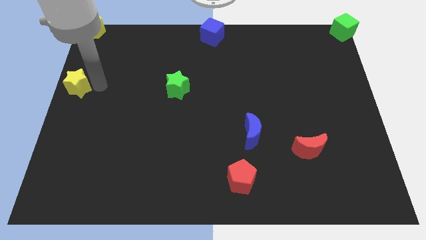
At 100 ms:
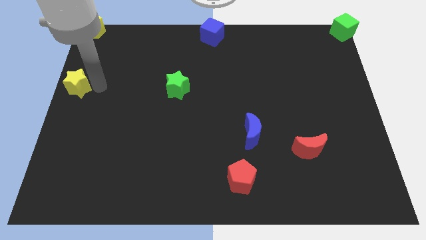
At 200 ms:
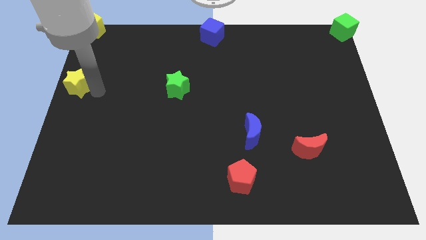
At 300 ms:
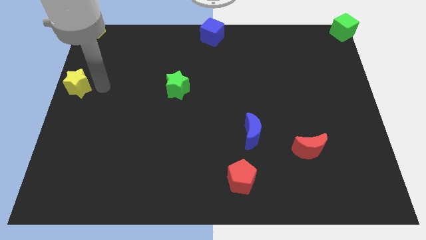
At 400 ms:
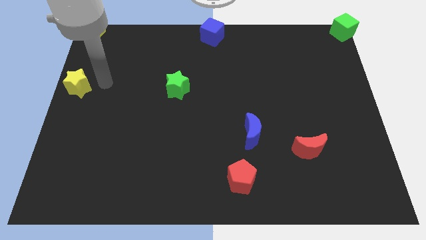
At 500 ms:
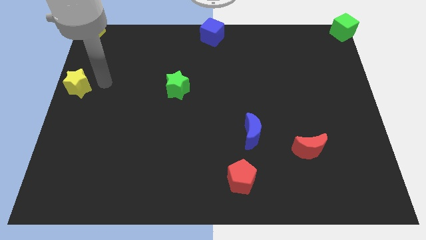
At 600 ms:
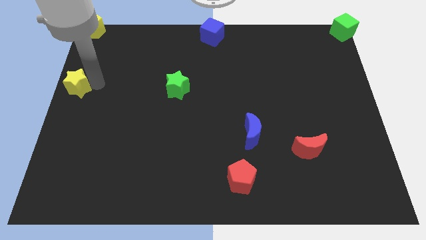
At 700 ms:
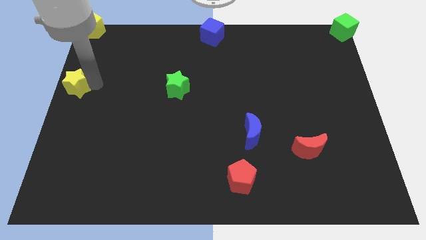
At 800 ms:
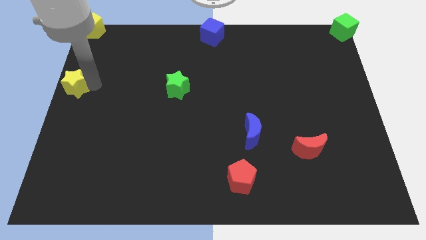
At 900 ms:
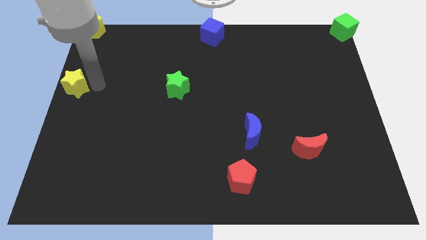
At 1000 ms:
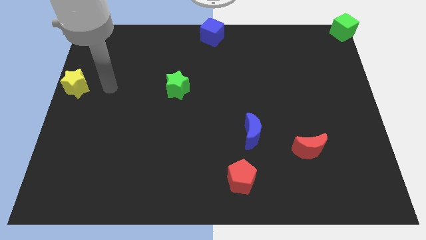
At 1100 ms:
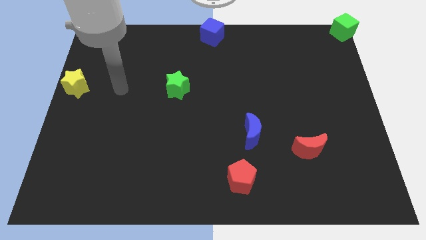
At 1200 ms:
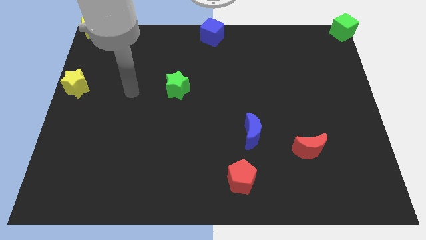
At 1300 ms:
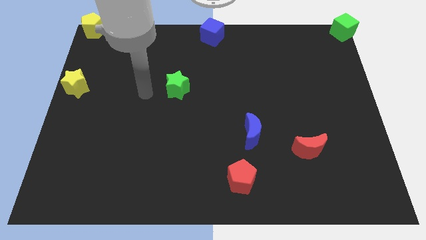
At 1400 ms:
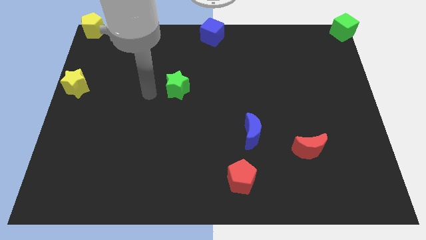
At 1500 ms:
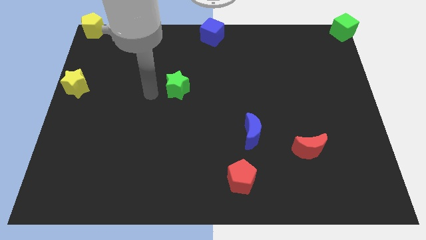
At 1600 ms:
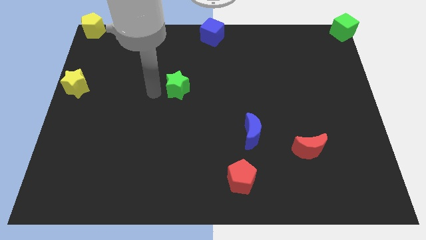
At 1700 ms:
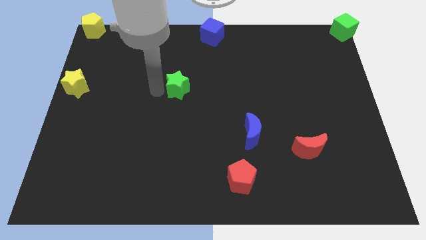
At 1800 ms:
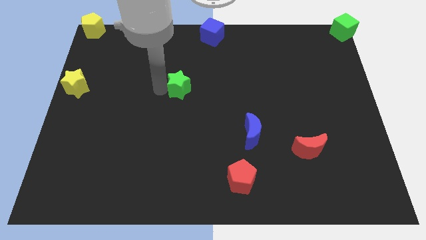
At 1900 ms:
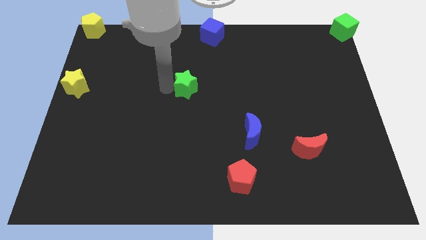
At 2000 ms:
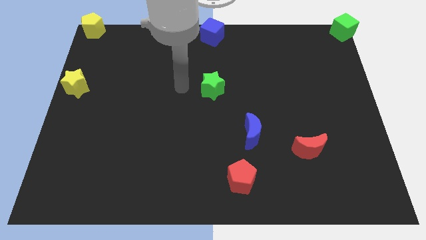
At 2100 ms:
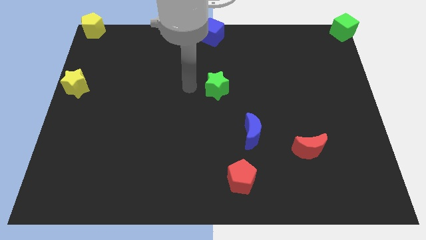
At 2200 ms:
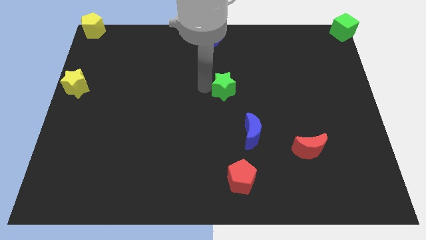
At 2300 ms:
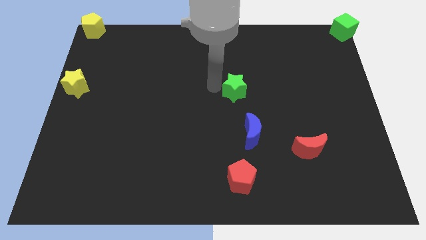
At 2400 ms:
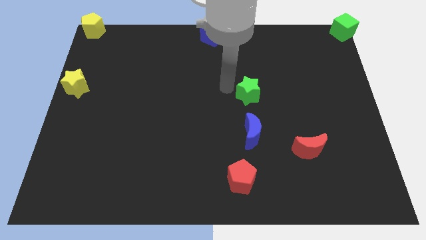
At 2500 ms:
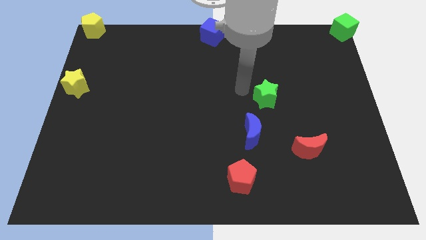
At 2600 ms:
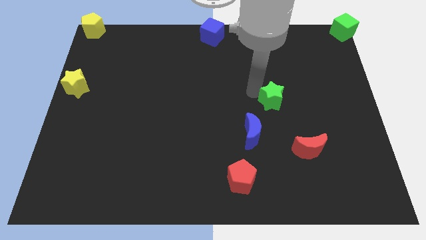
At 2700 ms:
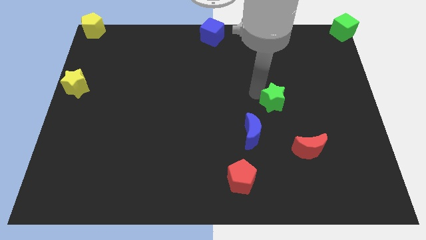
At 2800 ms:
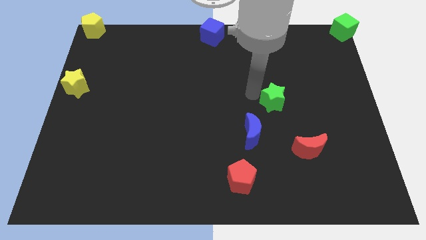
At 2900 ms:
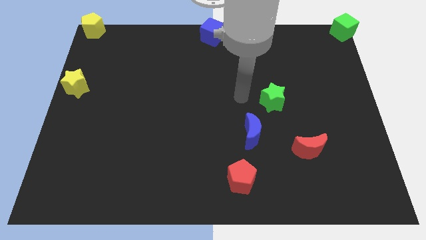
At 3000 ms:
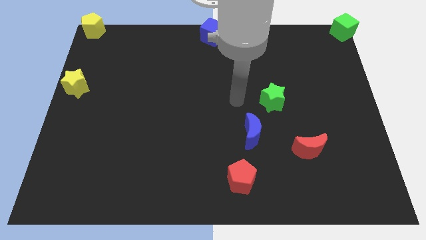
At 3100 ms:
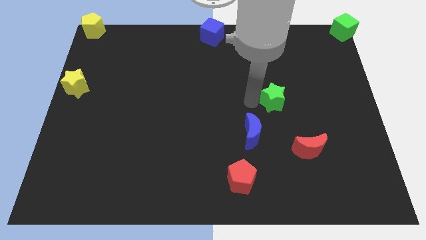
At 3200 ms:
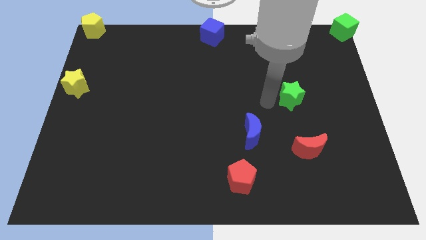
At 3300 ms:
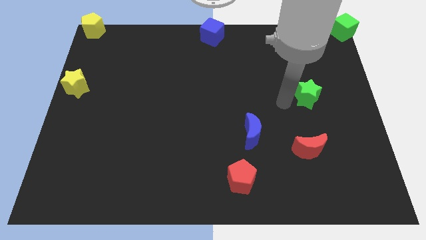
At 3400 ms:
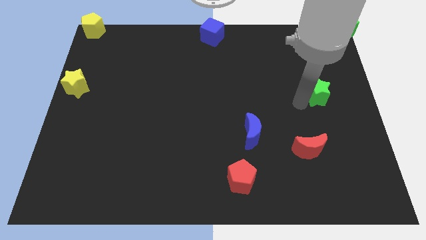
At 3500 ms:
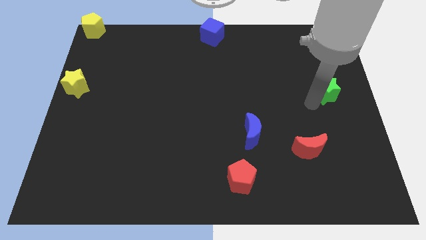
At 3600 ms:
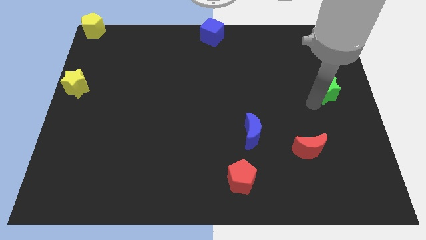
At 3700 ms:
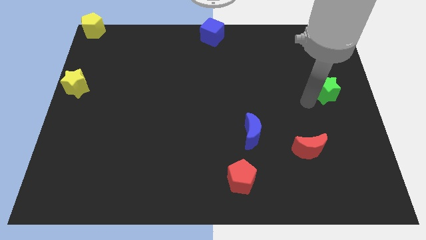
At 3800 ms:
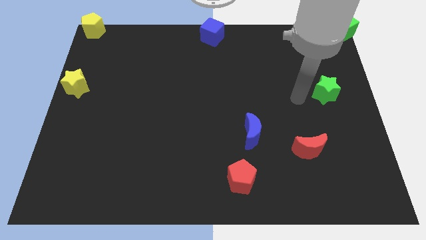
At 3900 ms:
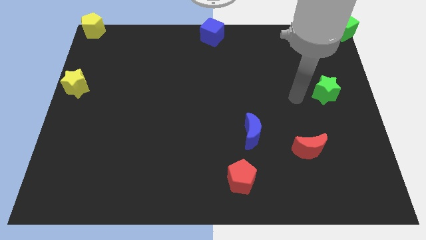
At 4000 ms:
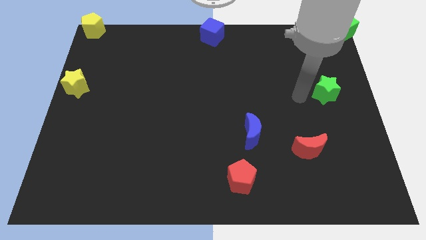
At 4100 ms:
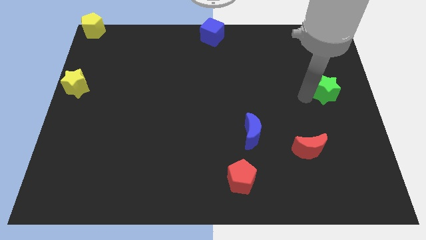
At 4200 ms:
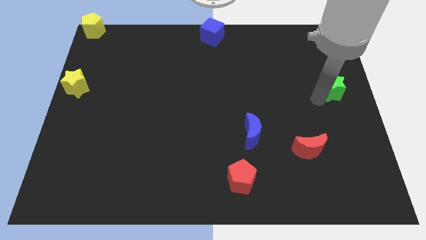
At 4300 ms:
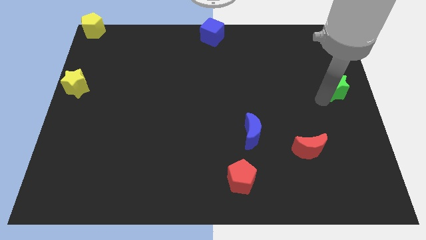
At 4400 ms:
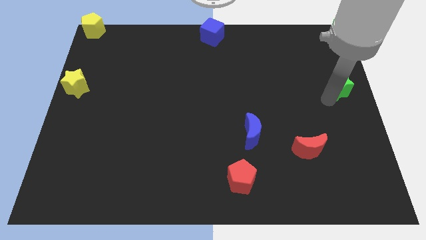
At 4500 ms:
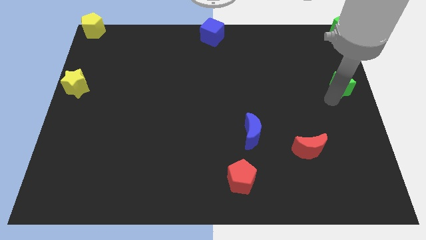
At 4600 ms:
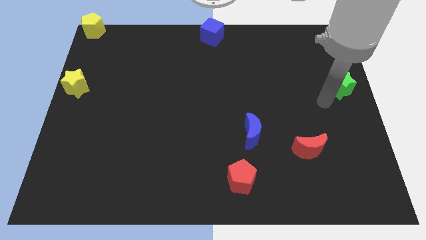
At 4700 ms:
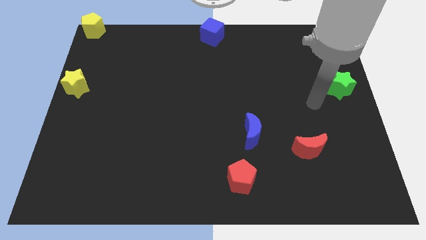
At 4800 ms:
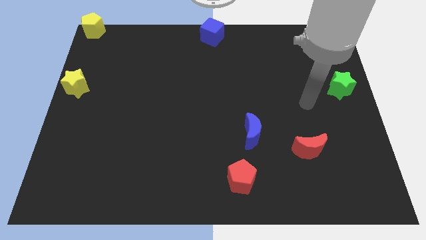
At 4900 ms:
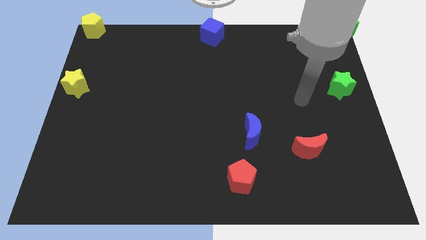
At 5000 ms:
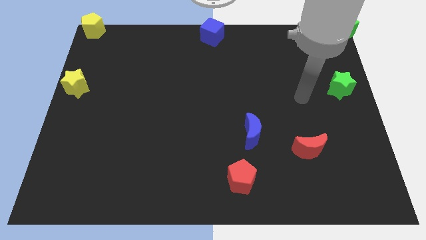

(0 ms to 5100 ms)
move the green star to the center right side of the board

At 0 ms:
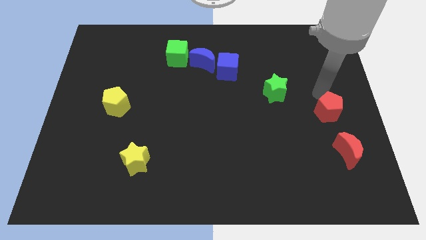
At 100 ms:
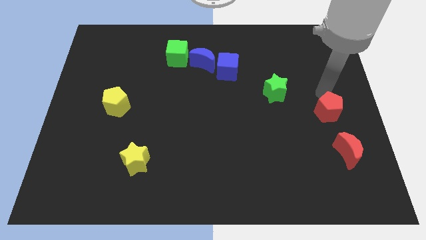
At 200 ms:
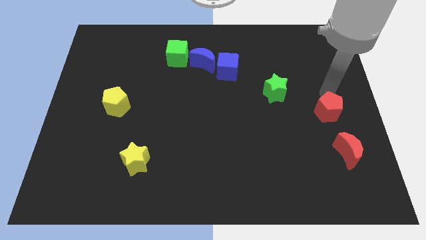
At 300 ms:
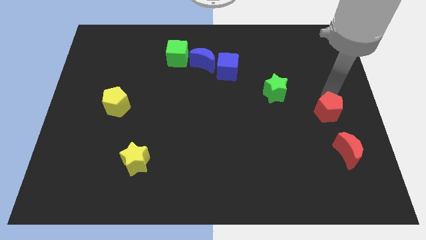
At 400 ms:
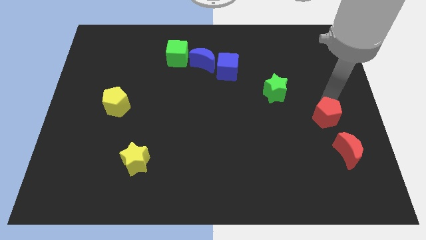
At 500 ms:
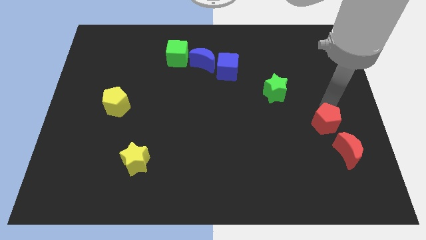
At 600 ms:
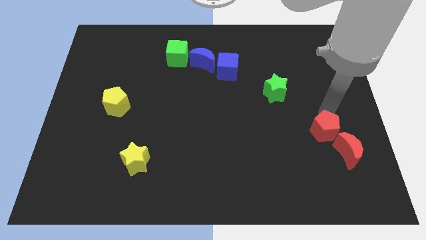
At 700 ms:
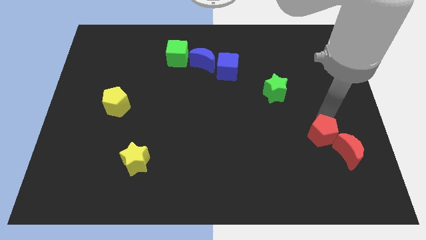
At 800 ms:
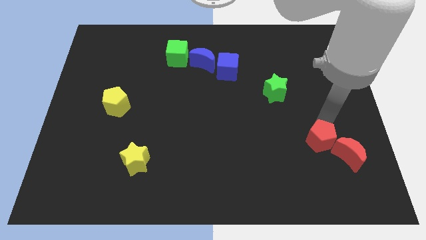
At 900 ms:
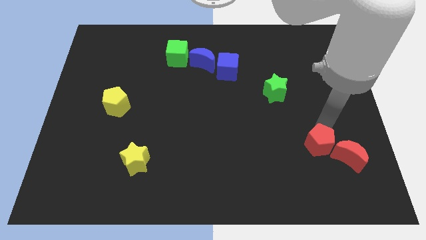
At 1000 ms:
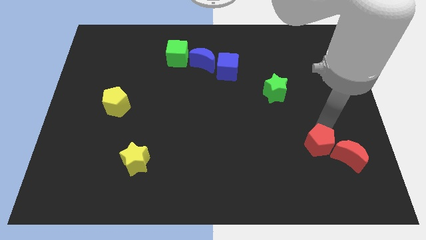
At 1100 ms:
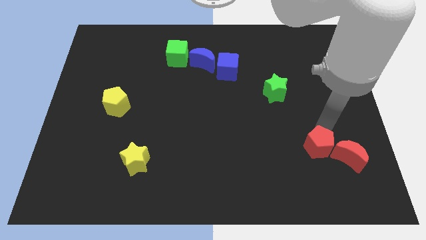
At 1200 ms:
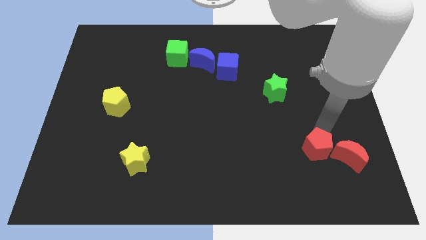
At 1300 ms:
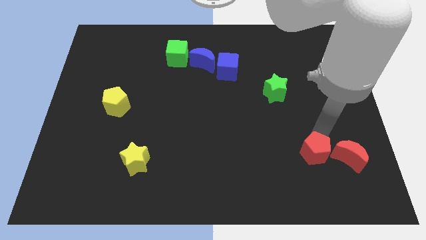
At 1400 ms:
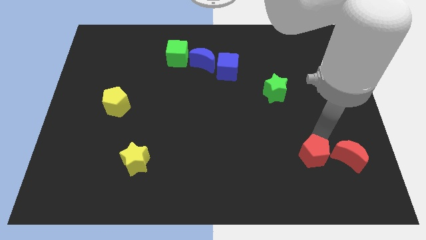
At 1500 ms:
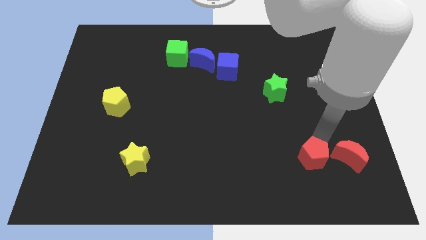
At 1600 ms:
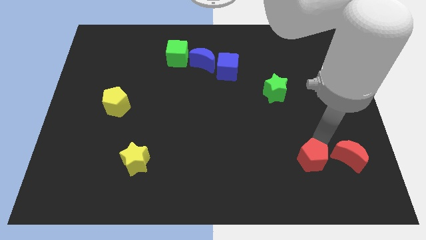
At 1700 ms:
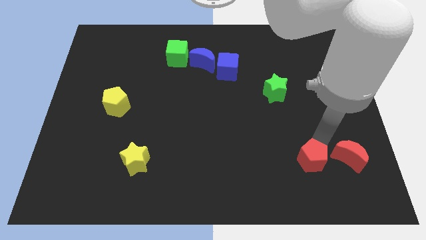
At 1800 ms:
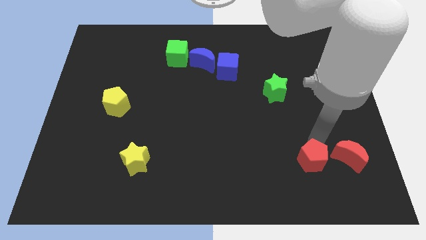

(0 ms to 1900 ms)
move red pentagon to the left of red crescent

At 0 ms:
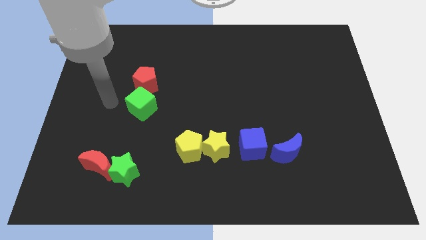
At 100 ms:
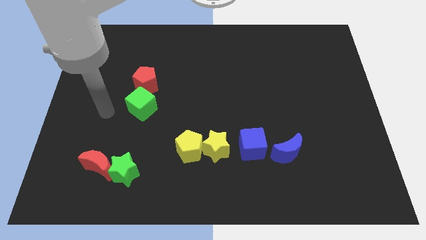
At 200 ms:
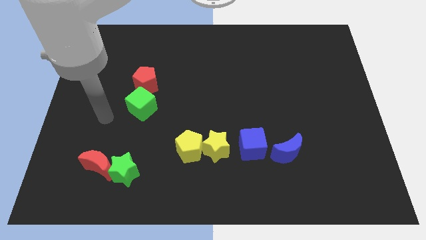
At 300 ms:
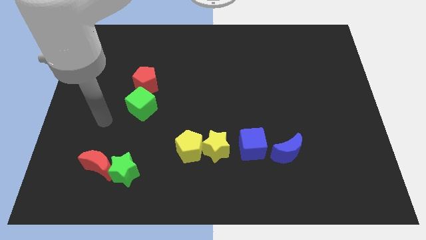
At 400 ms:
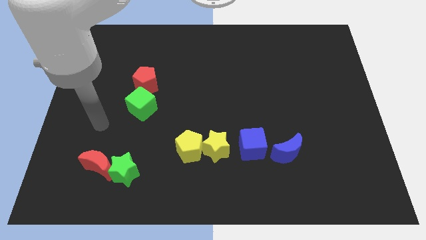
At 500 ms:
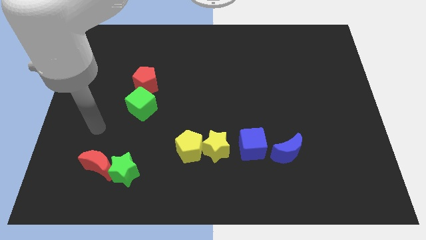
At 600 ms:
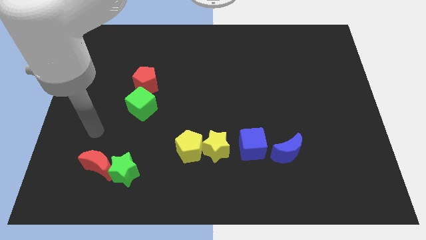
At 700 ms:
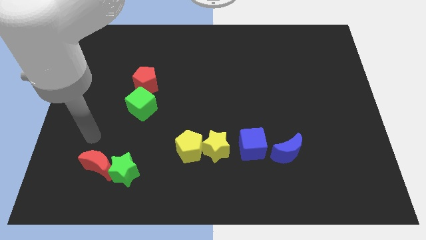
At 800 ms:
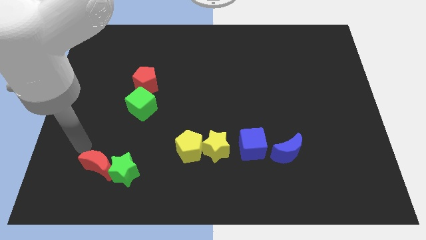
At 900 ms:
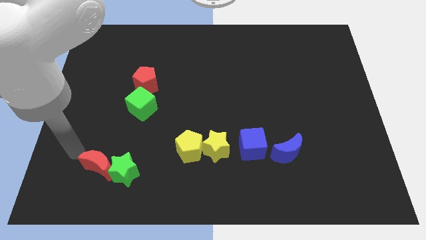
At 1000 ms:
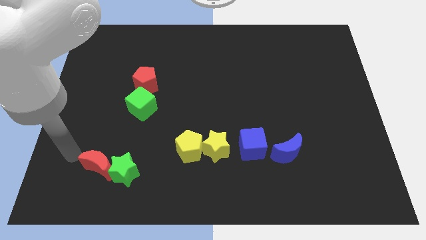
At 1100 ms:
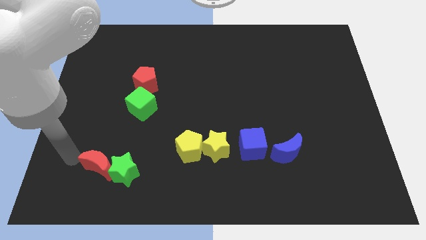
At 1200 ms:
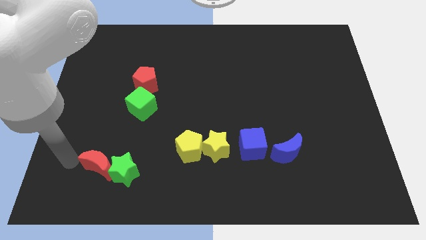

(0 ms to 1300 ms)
point your hand at the left of the red crescent

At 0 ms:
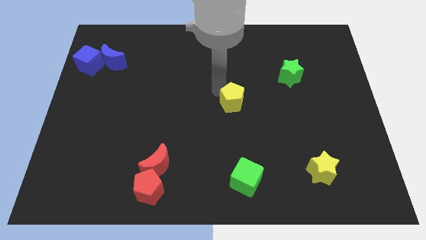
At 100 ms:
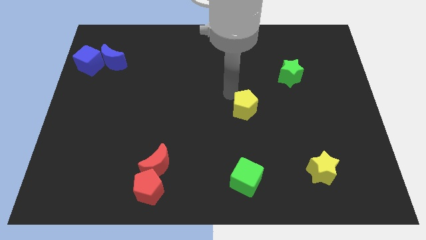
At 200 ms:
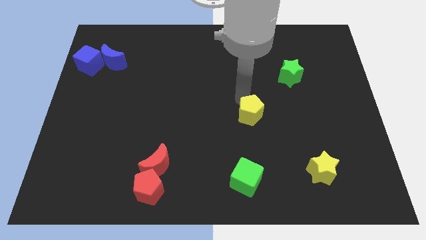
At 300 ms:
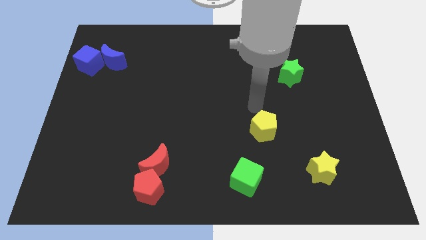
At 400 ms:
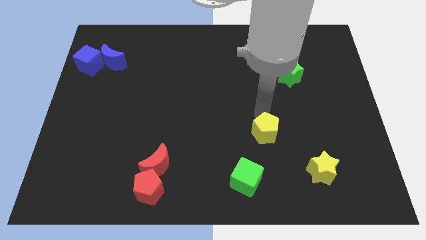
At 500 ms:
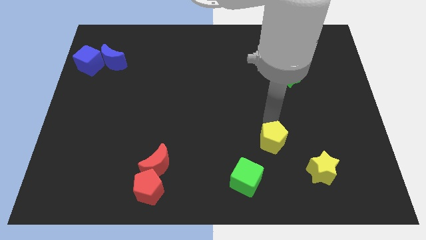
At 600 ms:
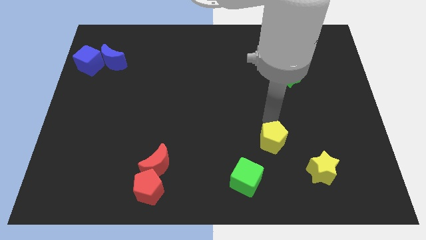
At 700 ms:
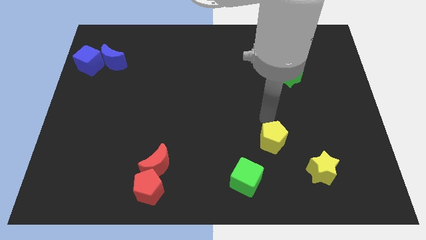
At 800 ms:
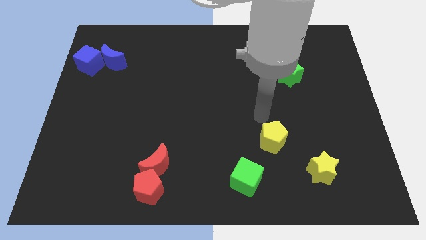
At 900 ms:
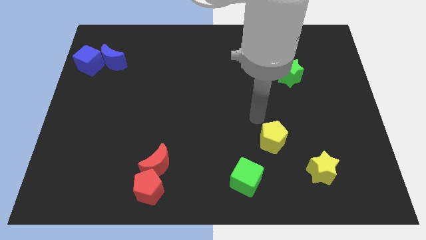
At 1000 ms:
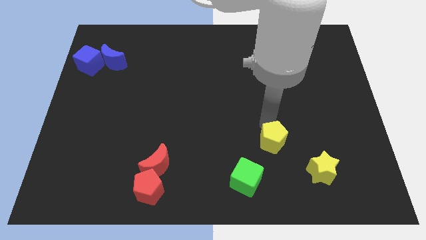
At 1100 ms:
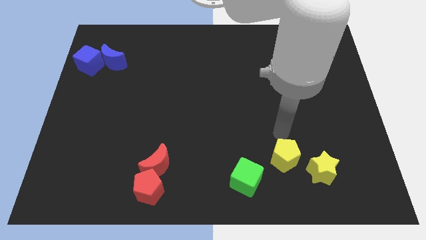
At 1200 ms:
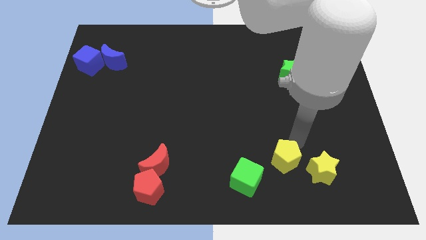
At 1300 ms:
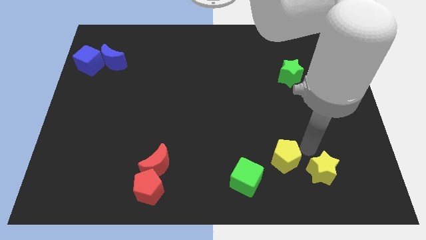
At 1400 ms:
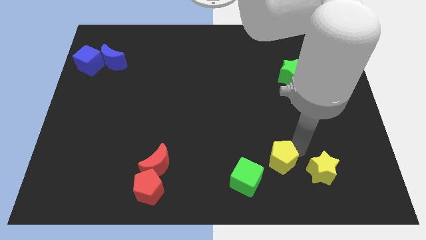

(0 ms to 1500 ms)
place the yellow pentagon at the top right side of the green cube
